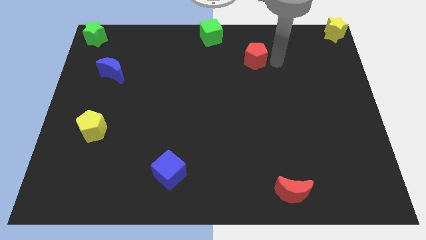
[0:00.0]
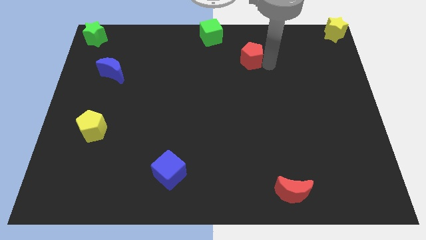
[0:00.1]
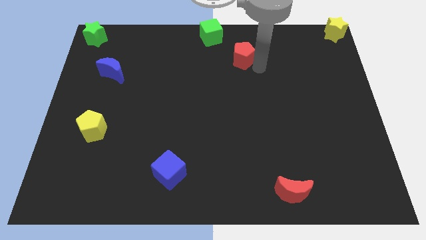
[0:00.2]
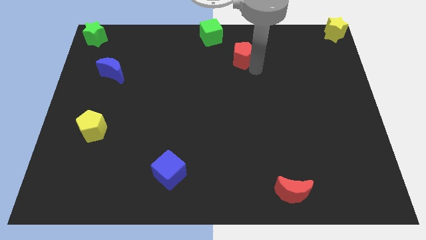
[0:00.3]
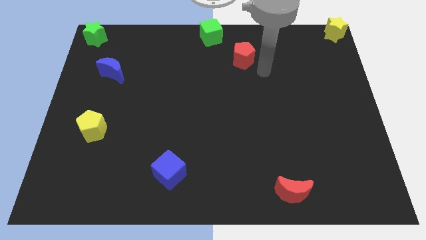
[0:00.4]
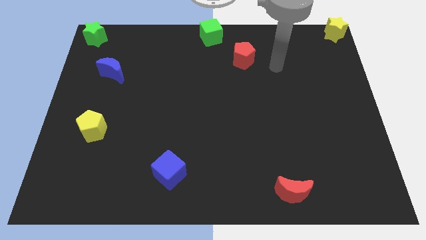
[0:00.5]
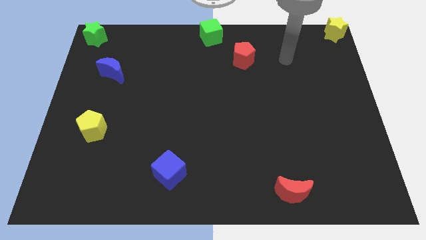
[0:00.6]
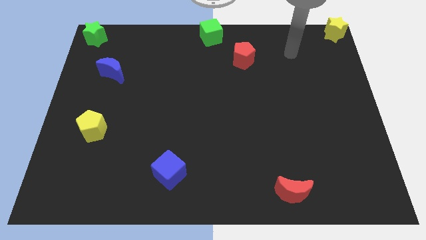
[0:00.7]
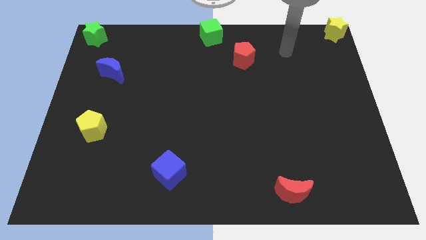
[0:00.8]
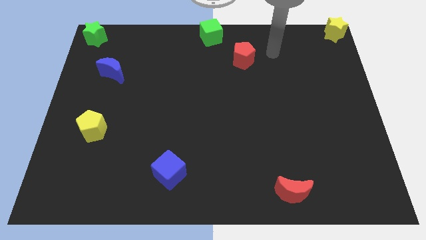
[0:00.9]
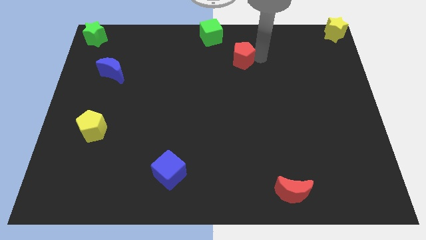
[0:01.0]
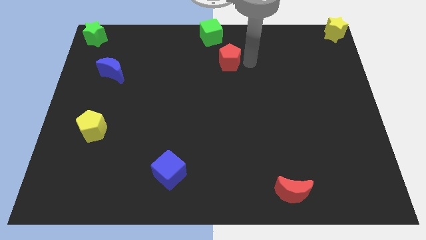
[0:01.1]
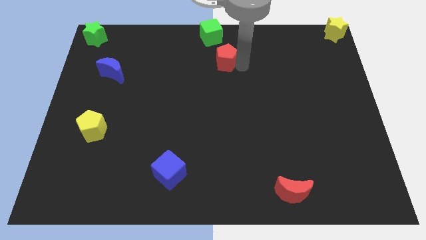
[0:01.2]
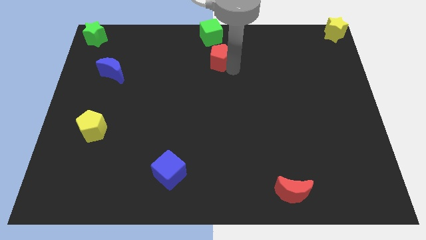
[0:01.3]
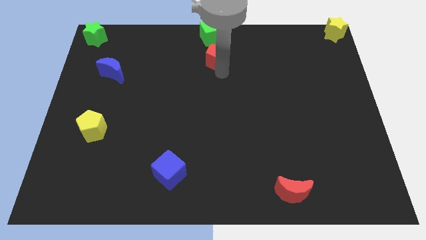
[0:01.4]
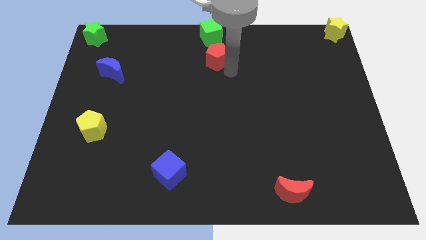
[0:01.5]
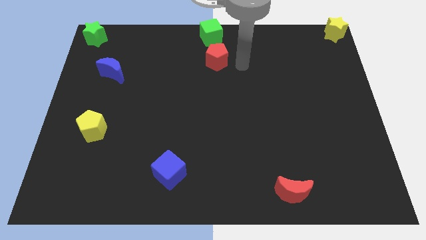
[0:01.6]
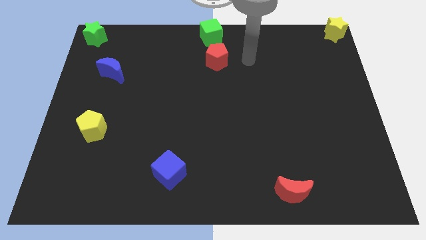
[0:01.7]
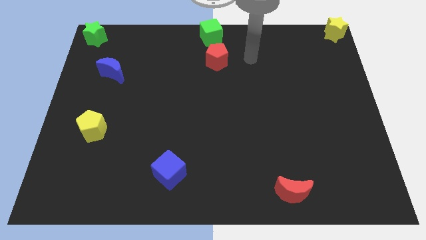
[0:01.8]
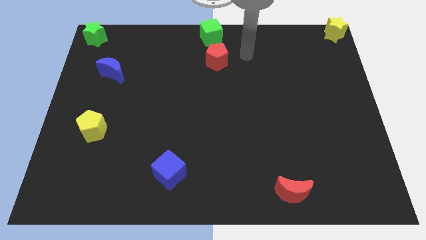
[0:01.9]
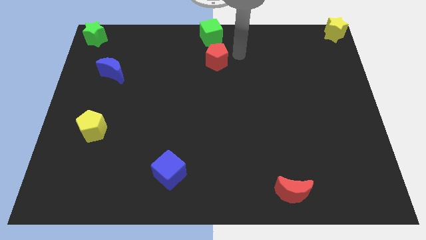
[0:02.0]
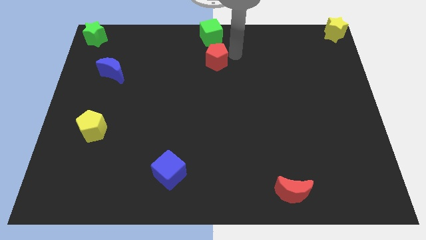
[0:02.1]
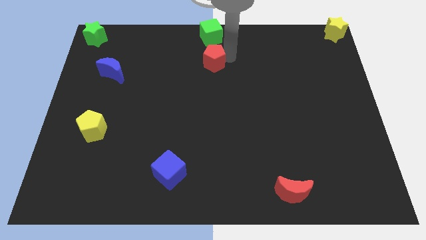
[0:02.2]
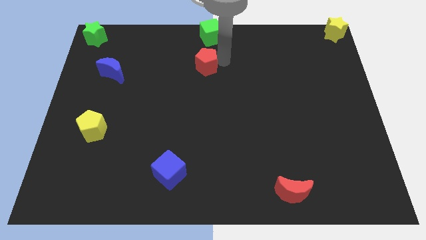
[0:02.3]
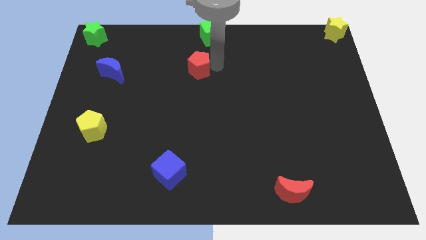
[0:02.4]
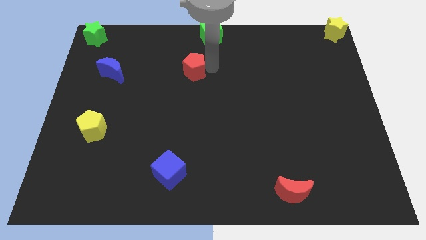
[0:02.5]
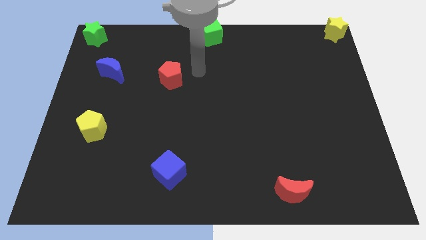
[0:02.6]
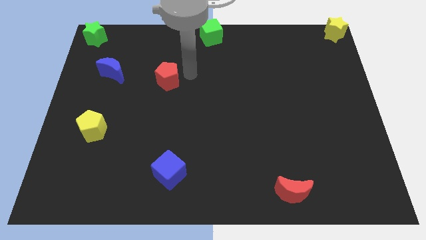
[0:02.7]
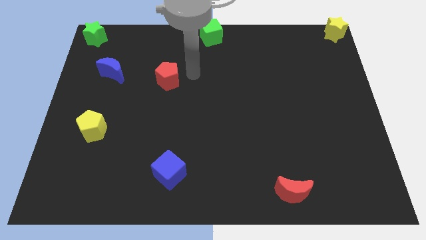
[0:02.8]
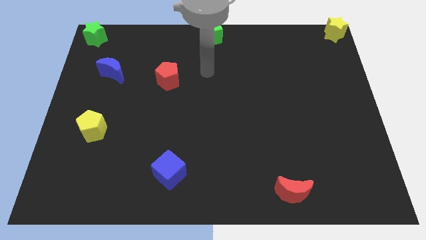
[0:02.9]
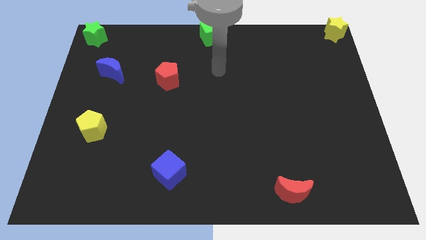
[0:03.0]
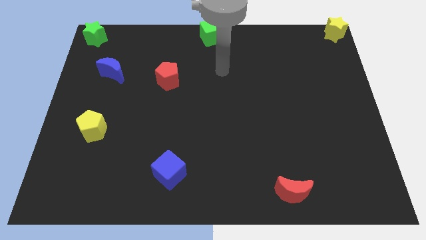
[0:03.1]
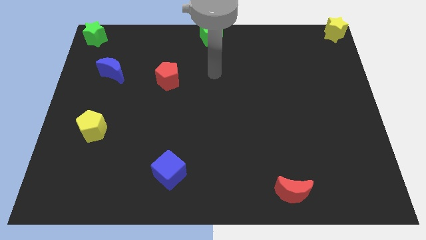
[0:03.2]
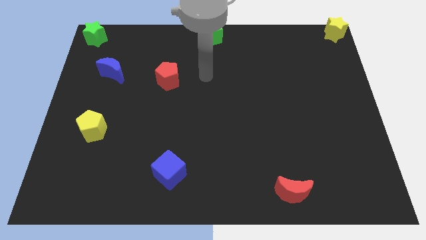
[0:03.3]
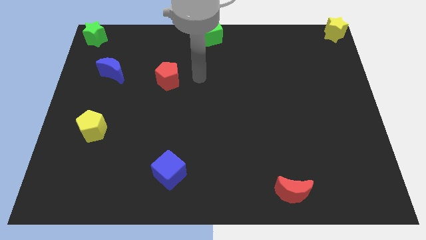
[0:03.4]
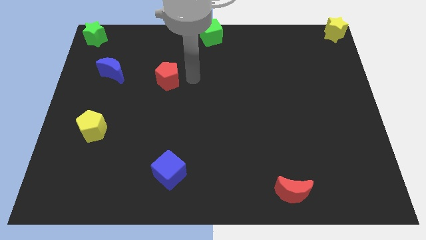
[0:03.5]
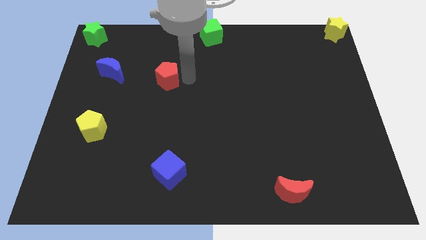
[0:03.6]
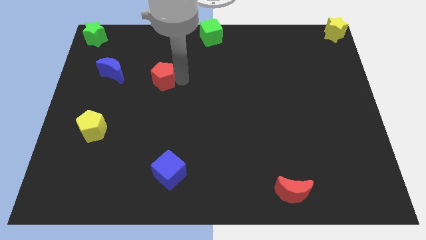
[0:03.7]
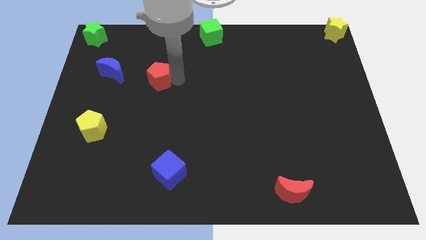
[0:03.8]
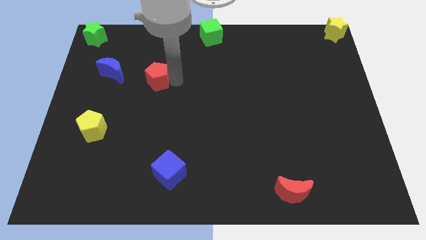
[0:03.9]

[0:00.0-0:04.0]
drag the red pentagon diagonally bottom left to the green cube

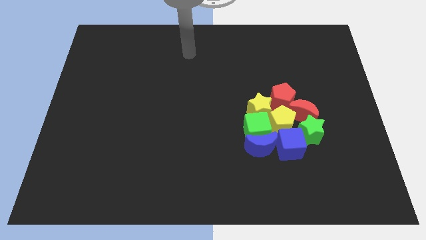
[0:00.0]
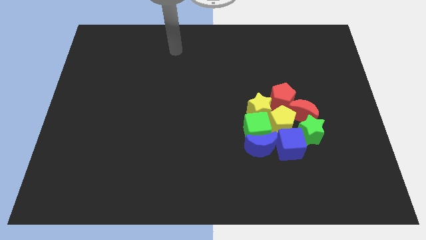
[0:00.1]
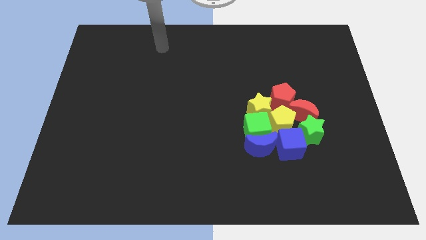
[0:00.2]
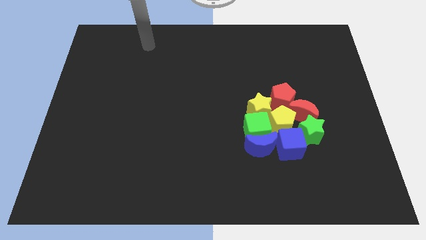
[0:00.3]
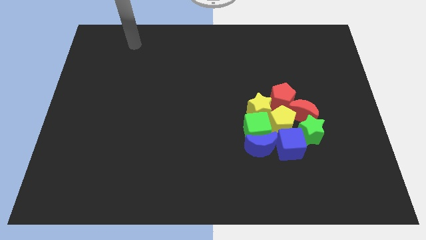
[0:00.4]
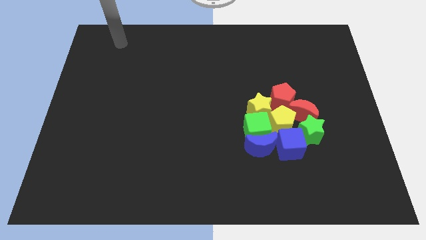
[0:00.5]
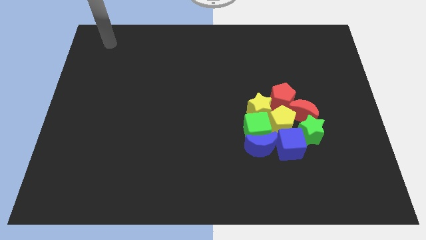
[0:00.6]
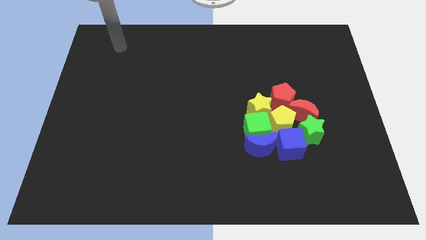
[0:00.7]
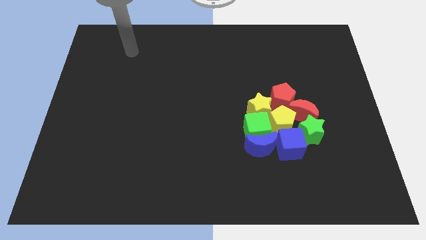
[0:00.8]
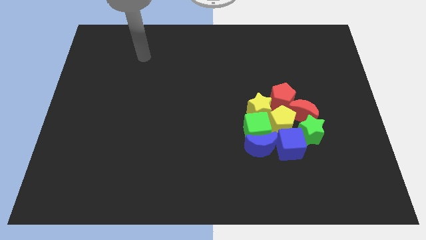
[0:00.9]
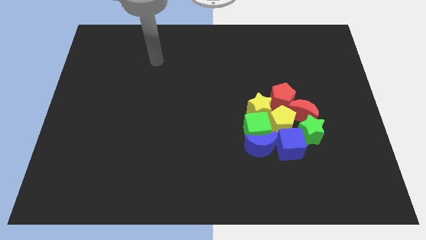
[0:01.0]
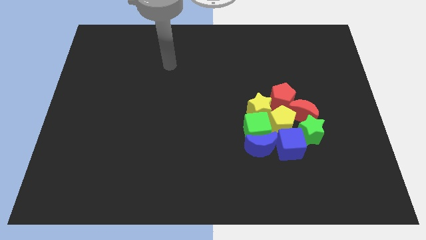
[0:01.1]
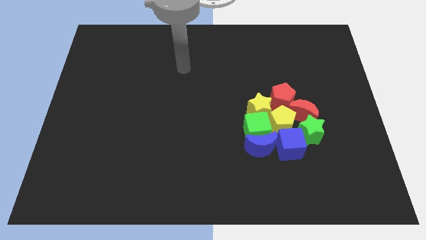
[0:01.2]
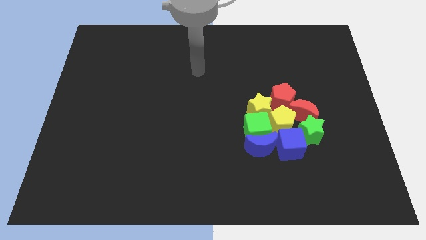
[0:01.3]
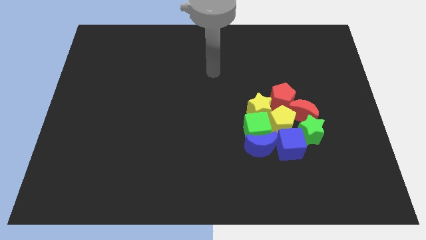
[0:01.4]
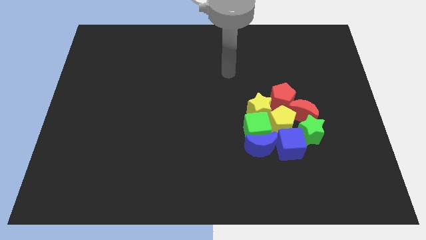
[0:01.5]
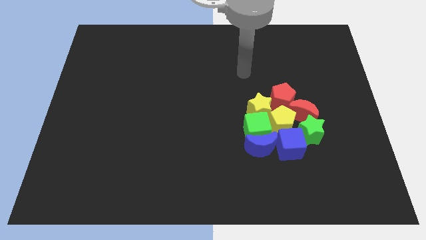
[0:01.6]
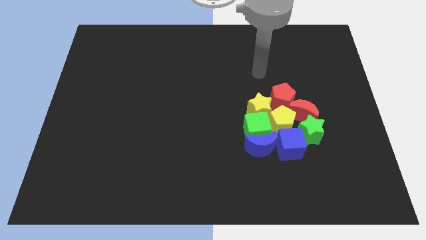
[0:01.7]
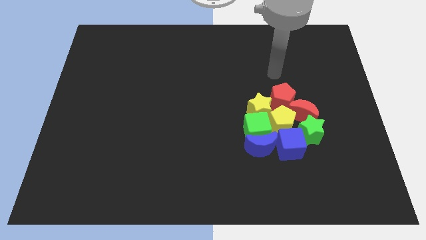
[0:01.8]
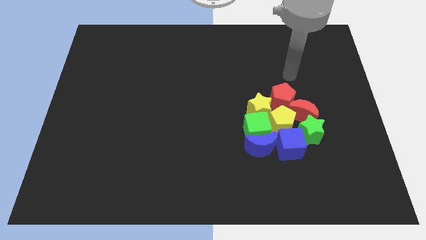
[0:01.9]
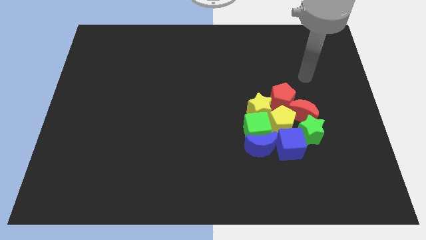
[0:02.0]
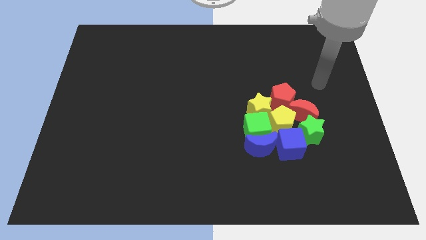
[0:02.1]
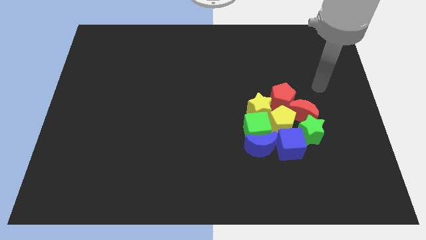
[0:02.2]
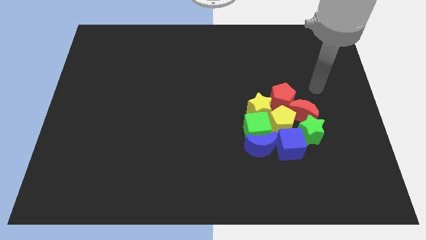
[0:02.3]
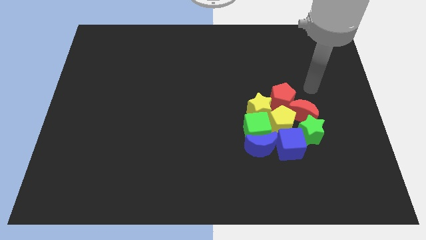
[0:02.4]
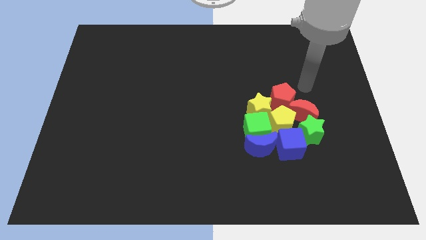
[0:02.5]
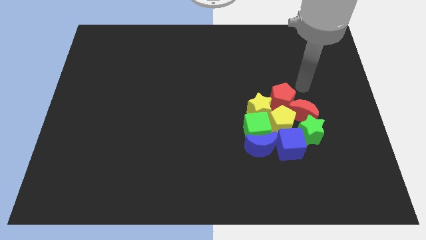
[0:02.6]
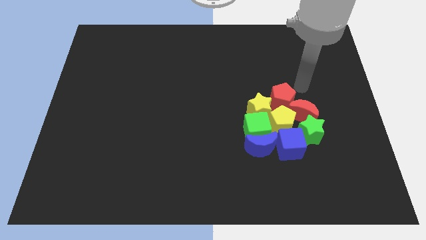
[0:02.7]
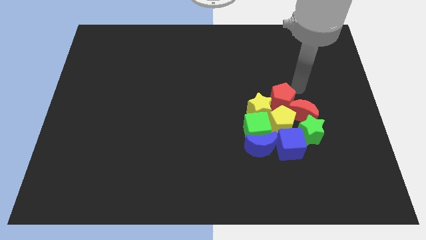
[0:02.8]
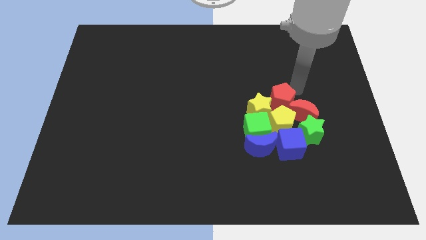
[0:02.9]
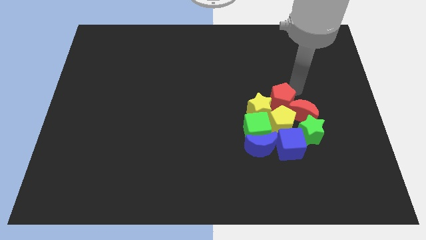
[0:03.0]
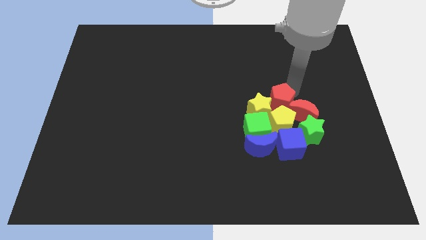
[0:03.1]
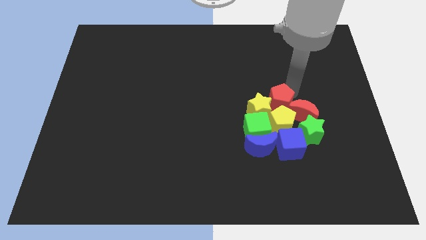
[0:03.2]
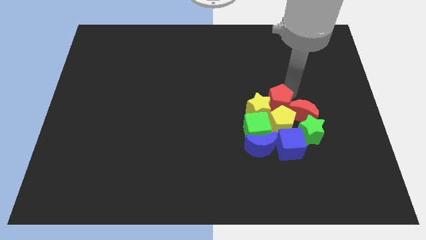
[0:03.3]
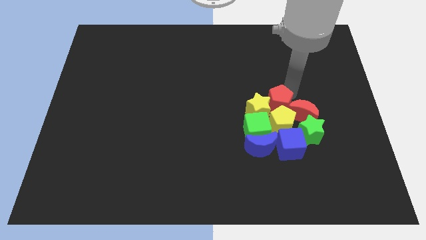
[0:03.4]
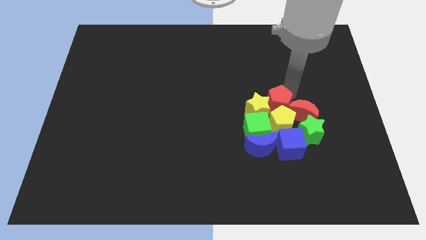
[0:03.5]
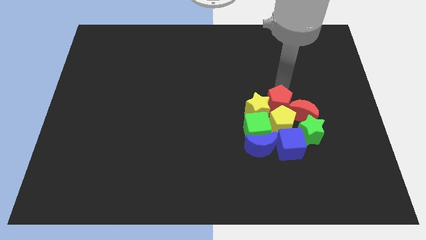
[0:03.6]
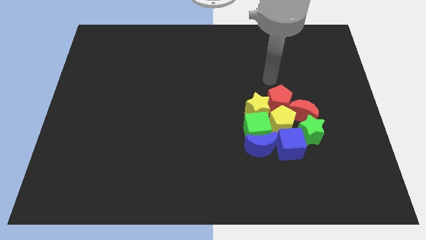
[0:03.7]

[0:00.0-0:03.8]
slightly push the red pentagon into the yellow star

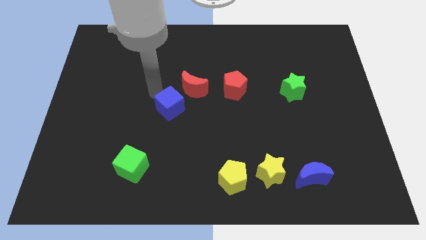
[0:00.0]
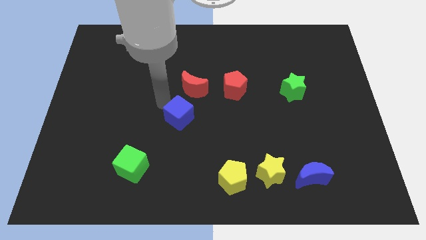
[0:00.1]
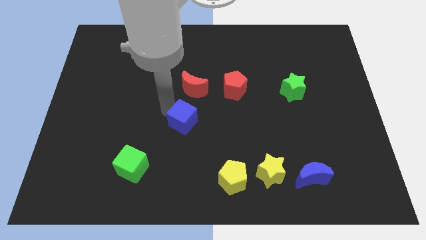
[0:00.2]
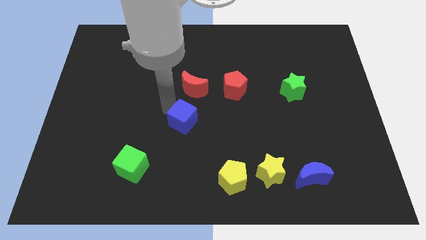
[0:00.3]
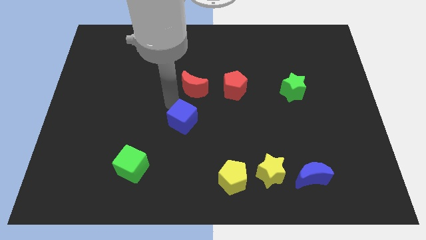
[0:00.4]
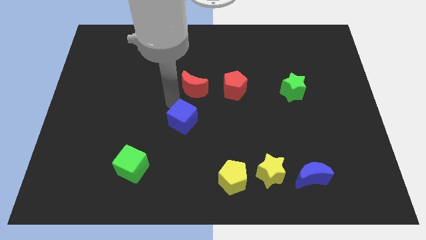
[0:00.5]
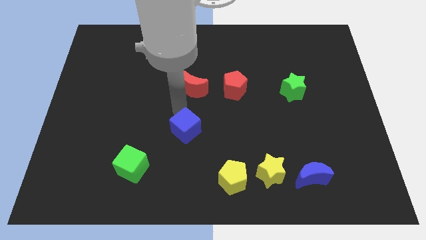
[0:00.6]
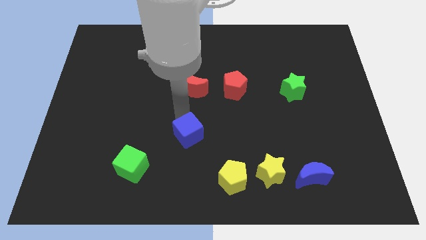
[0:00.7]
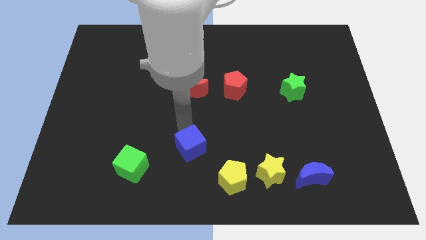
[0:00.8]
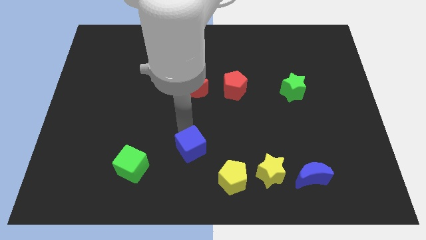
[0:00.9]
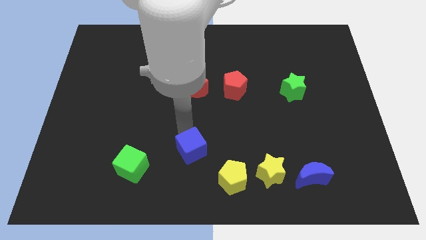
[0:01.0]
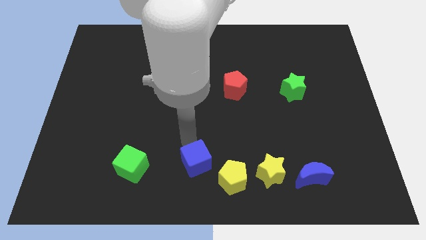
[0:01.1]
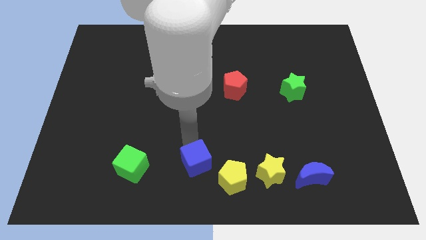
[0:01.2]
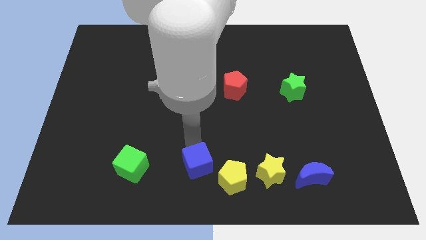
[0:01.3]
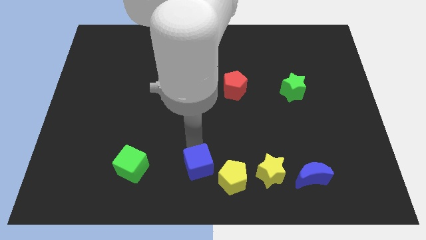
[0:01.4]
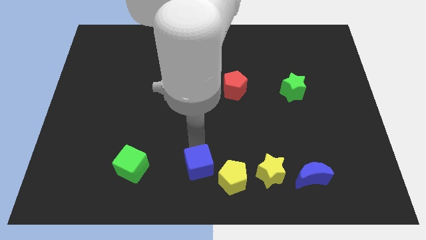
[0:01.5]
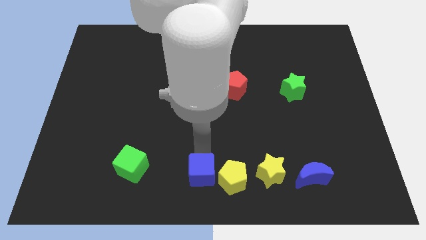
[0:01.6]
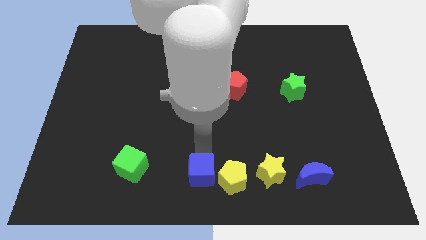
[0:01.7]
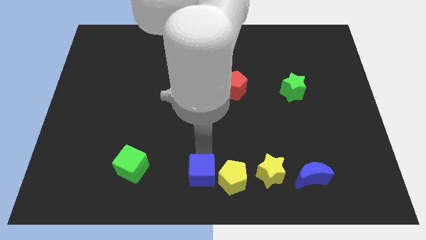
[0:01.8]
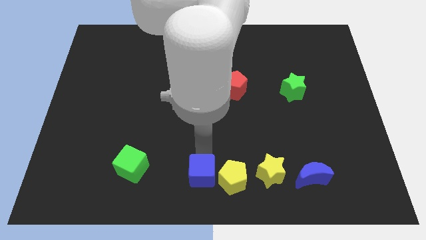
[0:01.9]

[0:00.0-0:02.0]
place the blue cube left to the yellow pentagon
